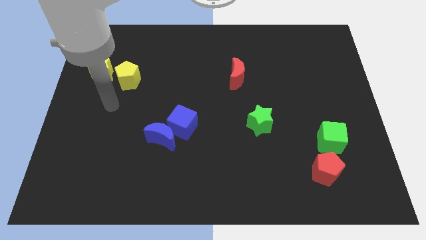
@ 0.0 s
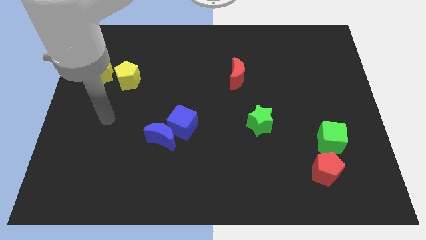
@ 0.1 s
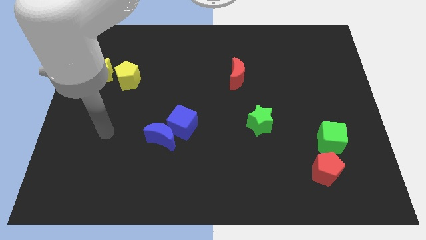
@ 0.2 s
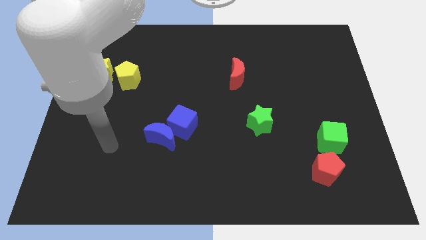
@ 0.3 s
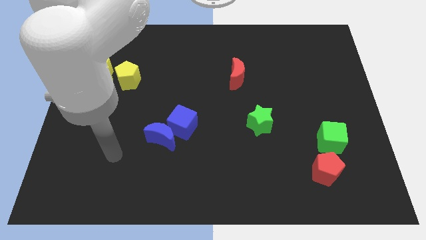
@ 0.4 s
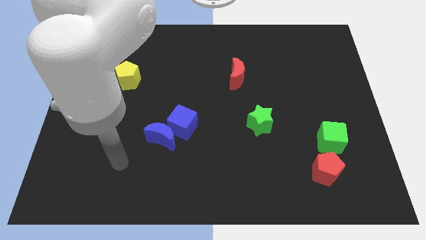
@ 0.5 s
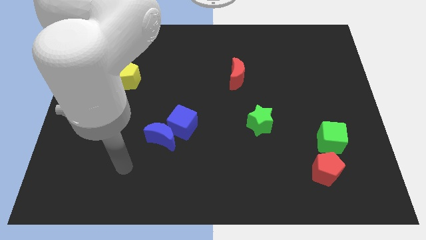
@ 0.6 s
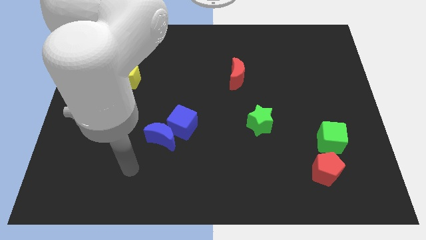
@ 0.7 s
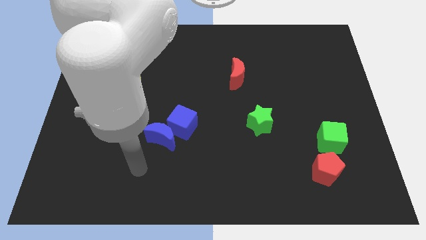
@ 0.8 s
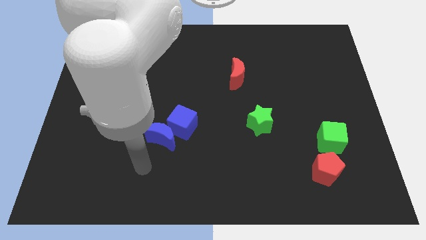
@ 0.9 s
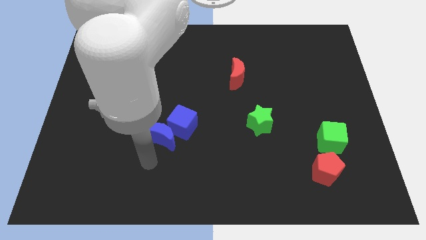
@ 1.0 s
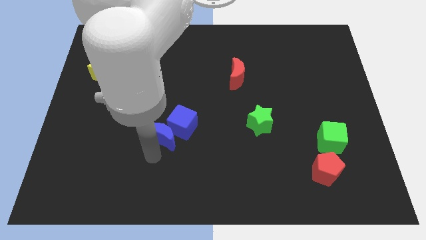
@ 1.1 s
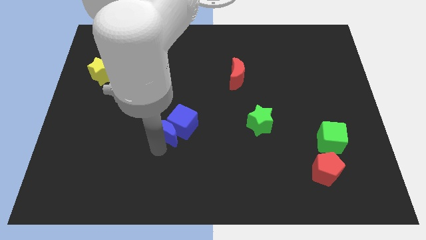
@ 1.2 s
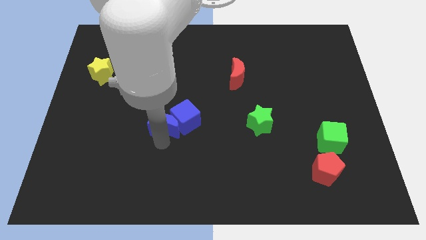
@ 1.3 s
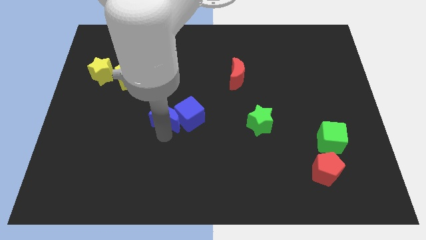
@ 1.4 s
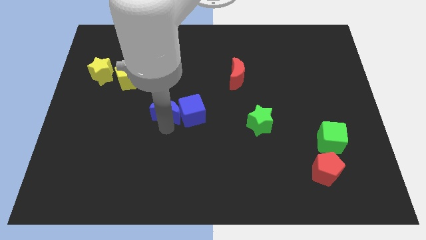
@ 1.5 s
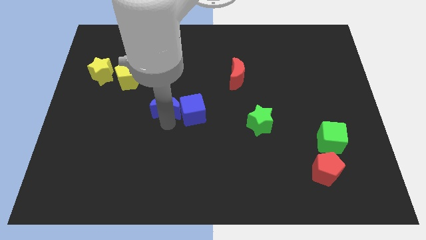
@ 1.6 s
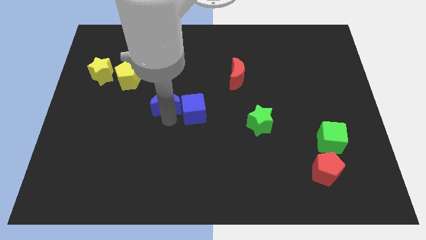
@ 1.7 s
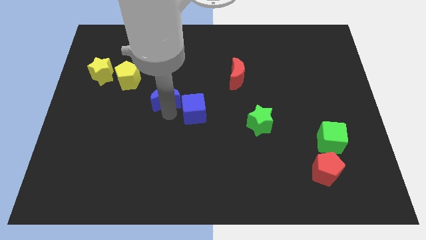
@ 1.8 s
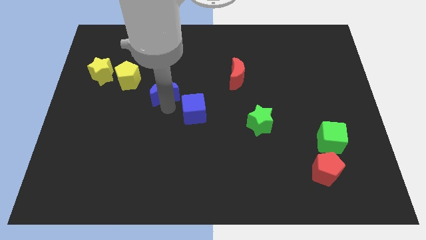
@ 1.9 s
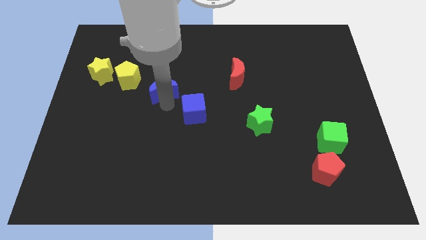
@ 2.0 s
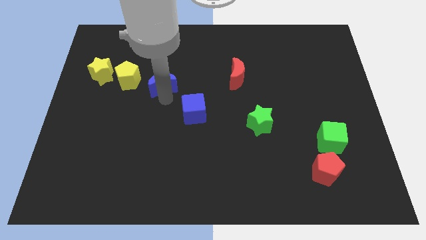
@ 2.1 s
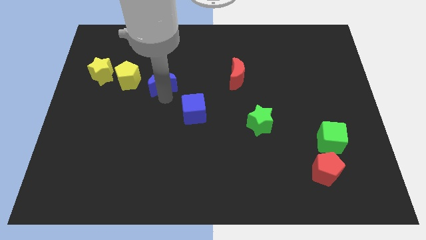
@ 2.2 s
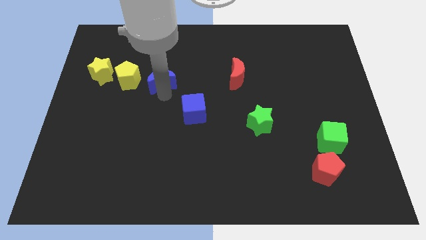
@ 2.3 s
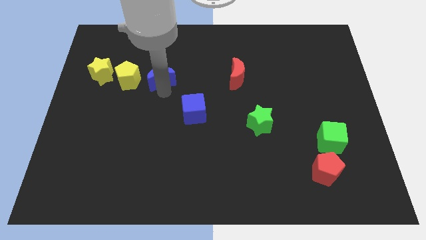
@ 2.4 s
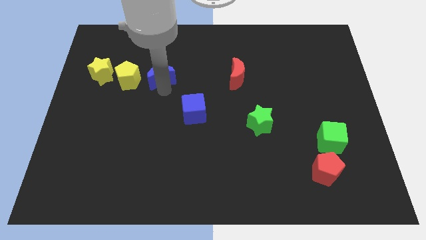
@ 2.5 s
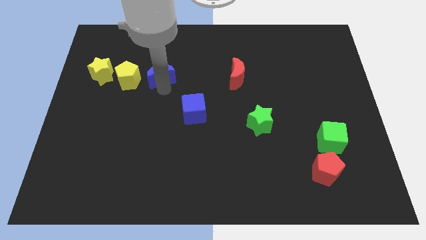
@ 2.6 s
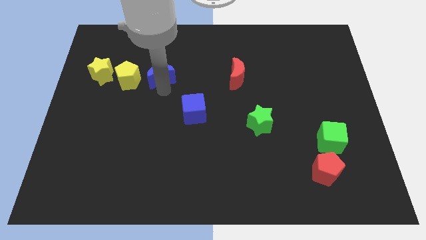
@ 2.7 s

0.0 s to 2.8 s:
push blue crescent beside yellow pentagon

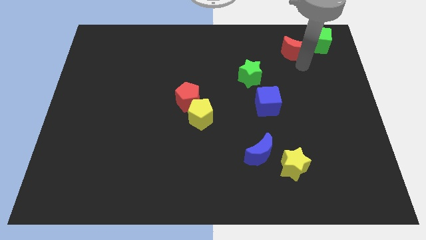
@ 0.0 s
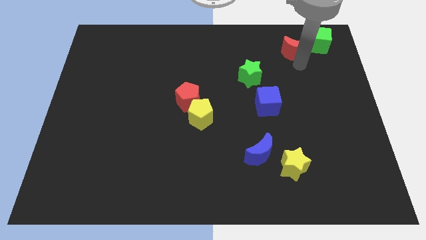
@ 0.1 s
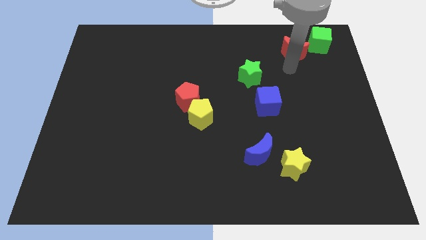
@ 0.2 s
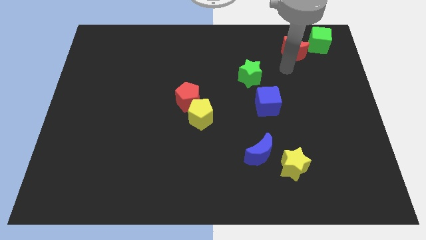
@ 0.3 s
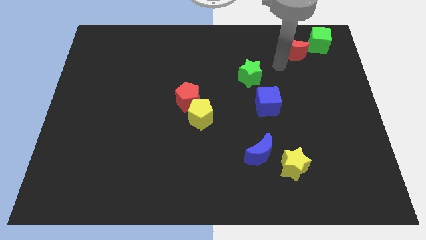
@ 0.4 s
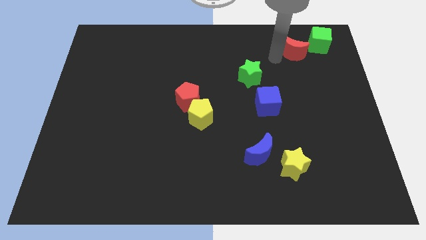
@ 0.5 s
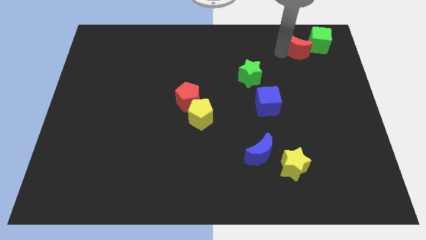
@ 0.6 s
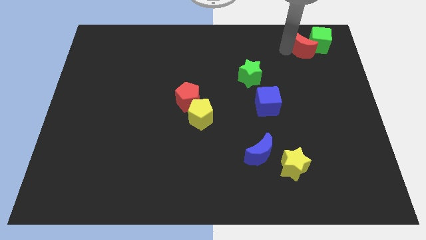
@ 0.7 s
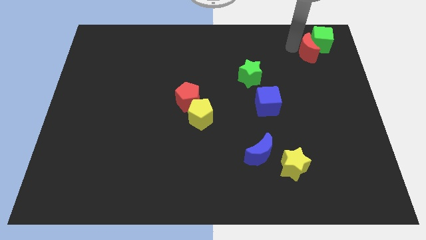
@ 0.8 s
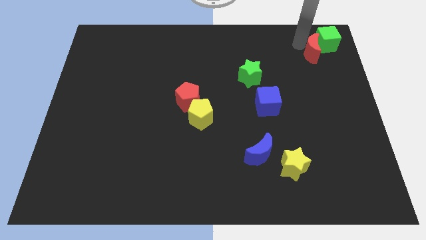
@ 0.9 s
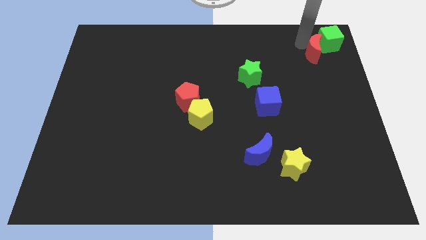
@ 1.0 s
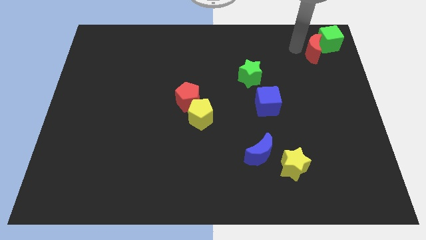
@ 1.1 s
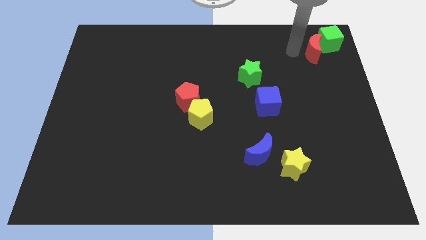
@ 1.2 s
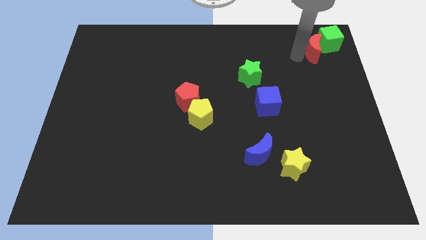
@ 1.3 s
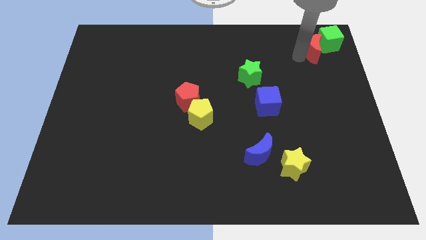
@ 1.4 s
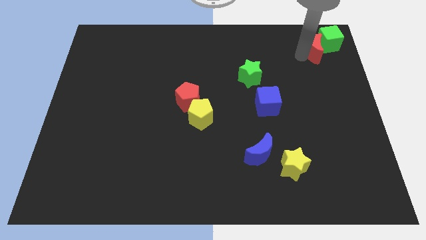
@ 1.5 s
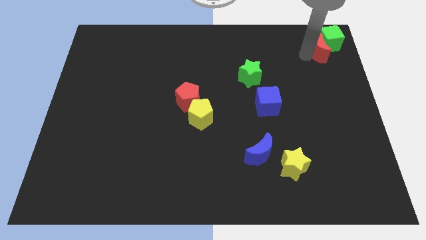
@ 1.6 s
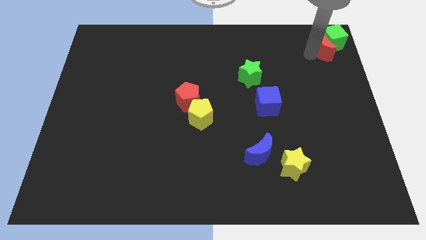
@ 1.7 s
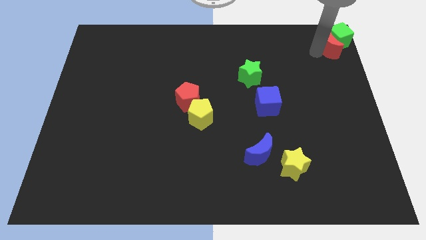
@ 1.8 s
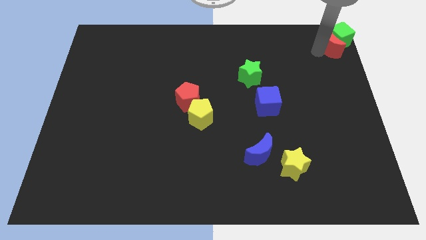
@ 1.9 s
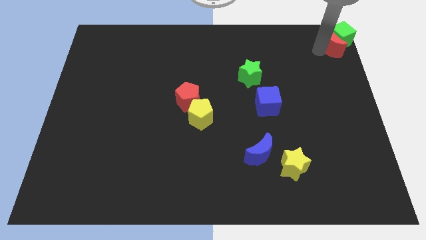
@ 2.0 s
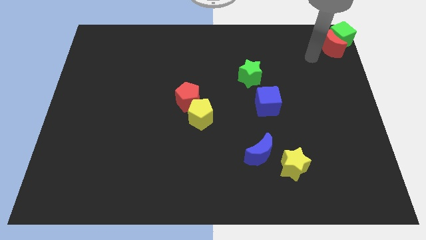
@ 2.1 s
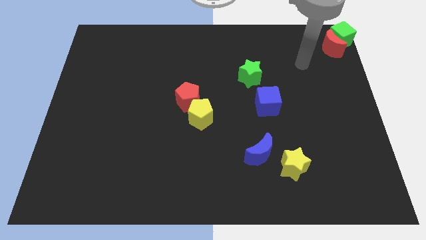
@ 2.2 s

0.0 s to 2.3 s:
move the red moon towards the top right corner

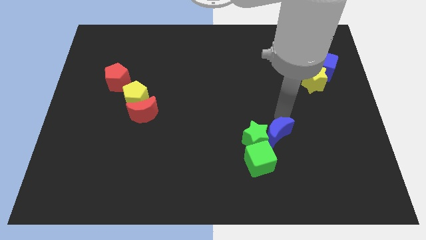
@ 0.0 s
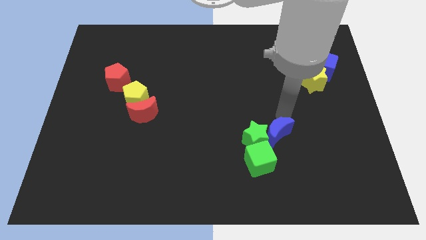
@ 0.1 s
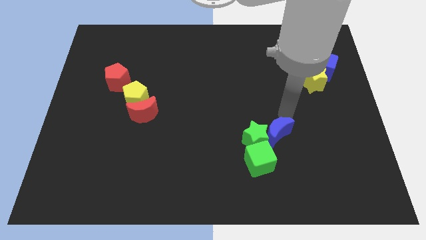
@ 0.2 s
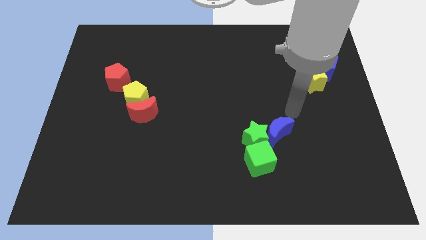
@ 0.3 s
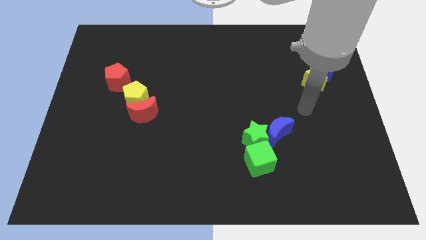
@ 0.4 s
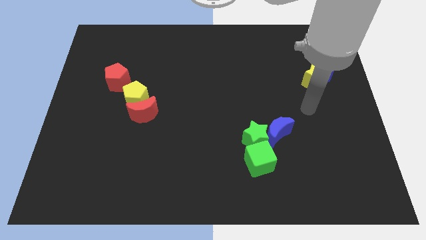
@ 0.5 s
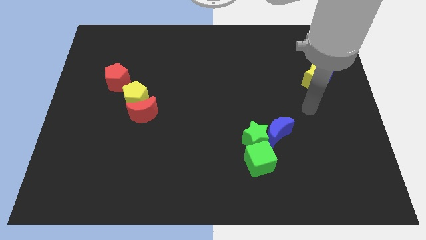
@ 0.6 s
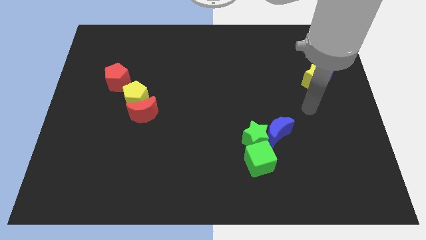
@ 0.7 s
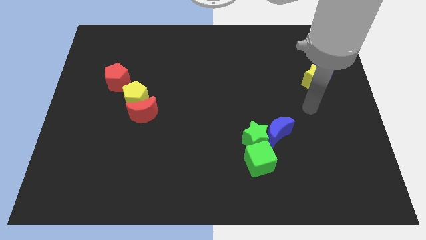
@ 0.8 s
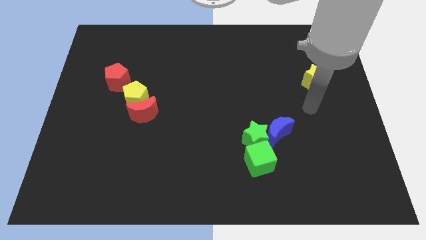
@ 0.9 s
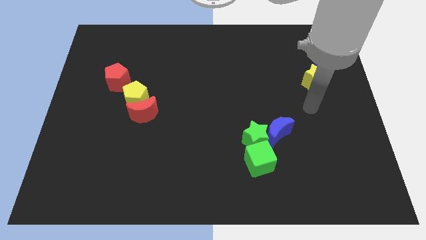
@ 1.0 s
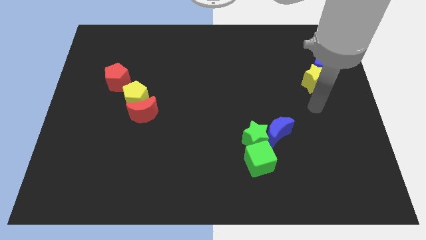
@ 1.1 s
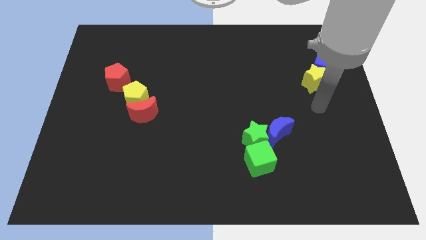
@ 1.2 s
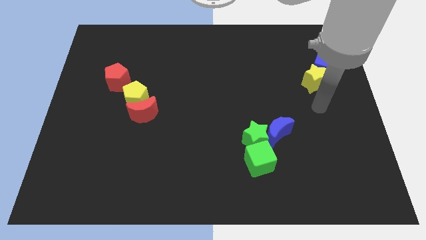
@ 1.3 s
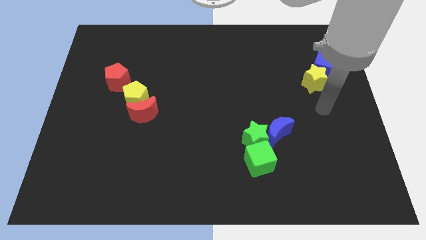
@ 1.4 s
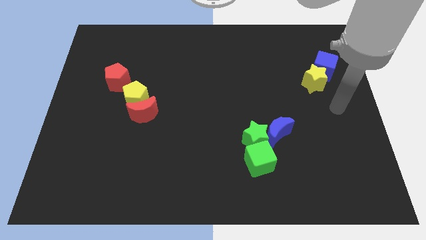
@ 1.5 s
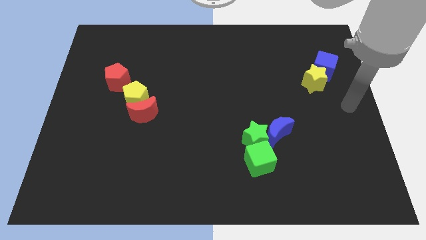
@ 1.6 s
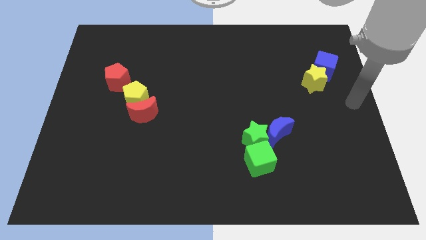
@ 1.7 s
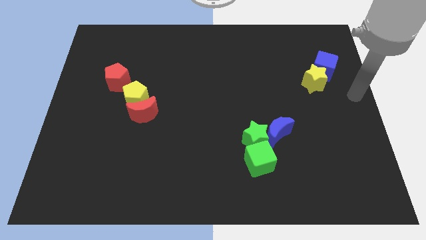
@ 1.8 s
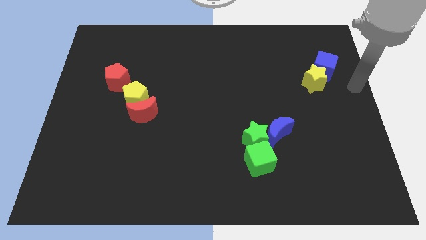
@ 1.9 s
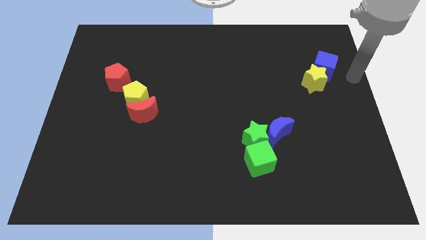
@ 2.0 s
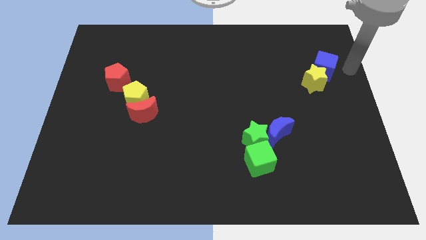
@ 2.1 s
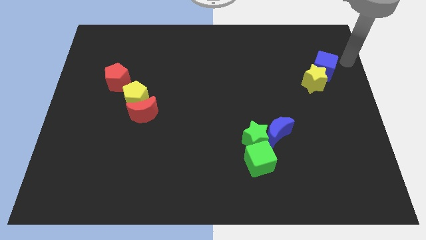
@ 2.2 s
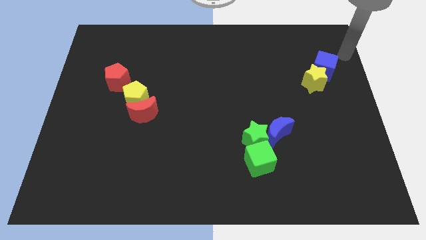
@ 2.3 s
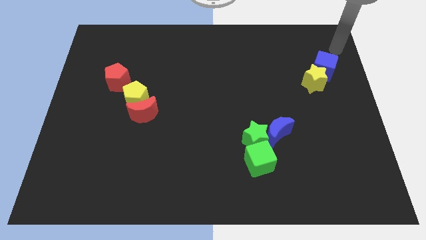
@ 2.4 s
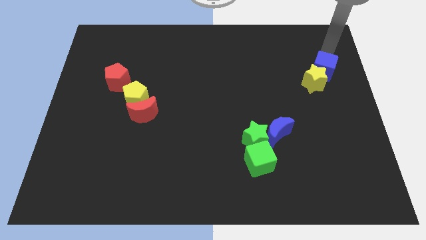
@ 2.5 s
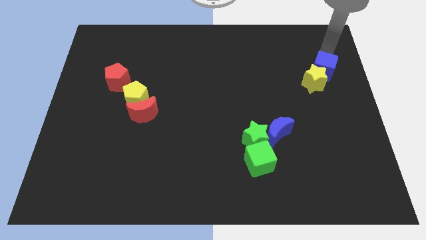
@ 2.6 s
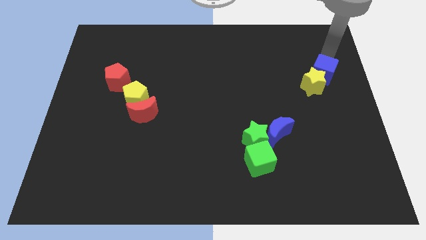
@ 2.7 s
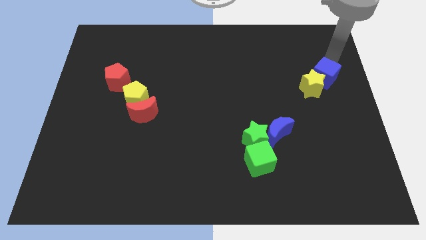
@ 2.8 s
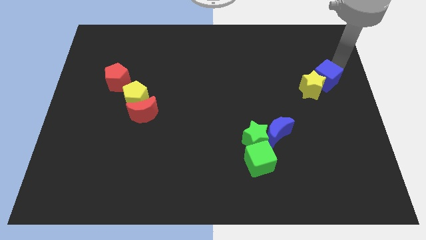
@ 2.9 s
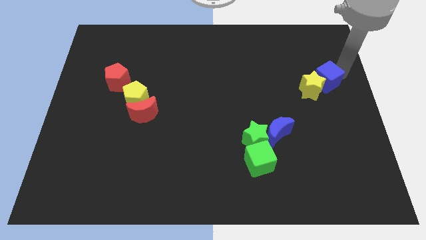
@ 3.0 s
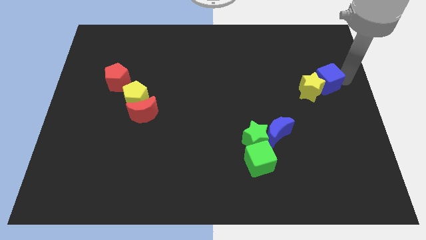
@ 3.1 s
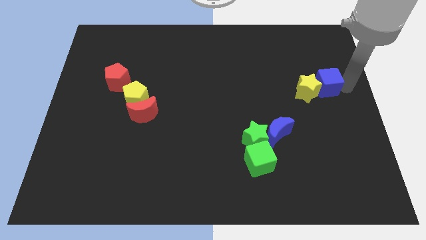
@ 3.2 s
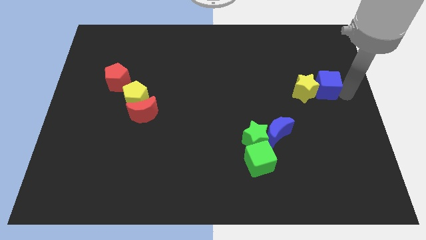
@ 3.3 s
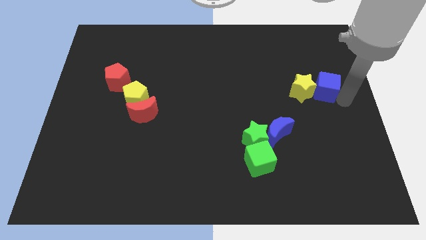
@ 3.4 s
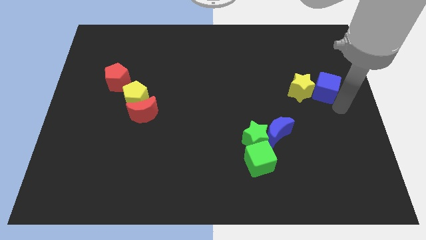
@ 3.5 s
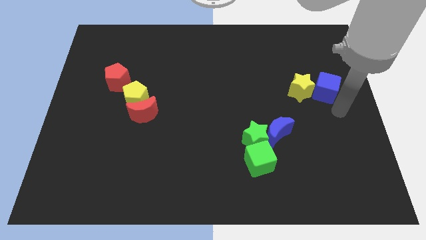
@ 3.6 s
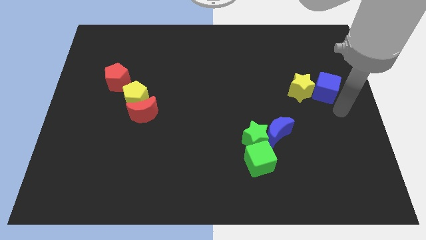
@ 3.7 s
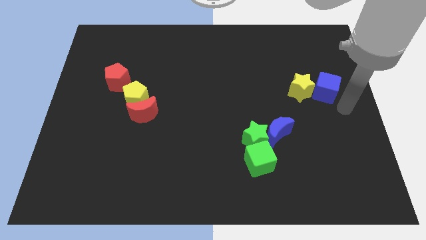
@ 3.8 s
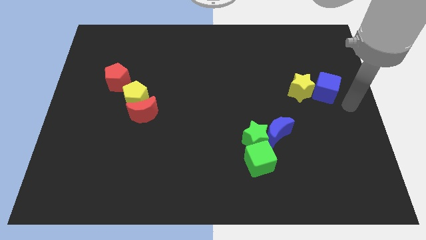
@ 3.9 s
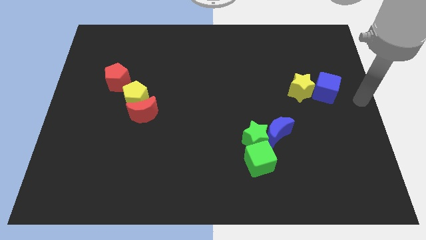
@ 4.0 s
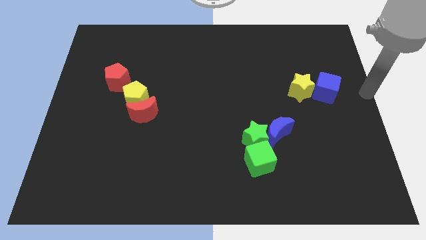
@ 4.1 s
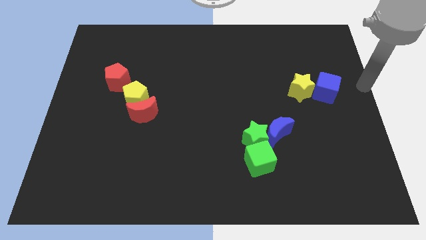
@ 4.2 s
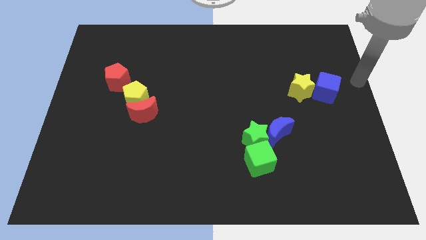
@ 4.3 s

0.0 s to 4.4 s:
push the blue cube and yellow star towards the top side of the blue moon
